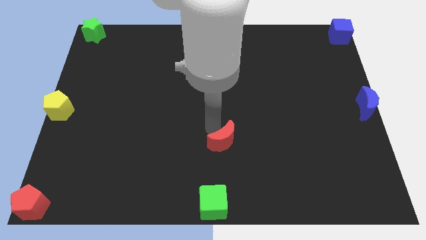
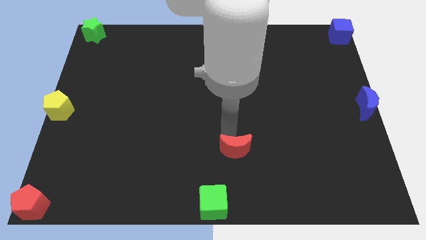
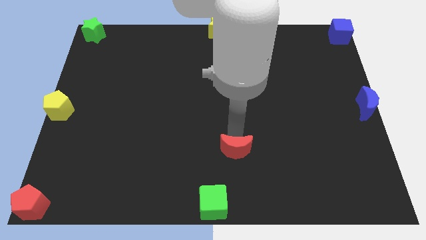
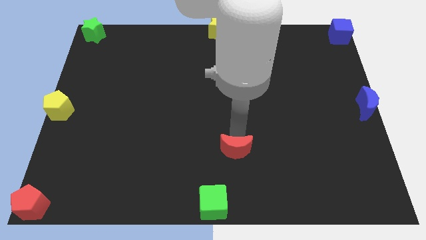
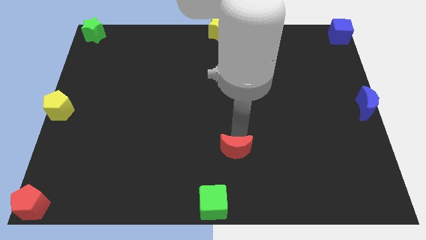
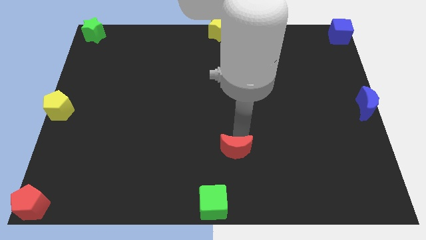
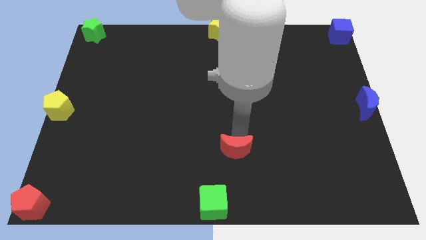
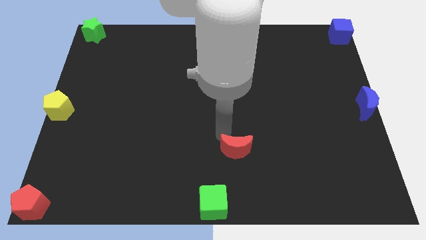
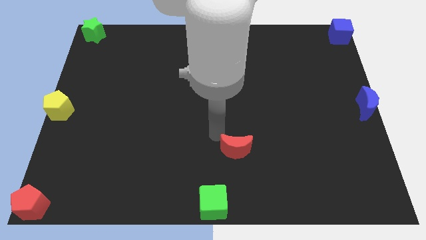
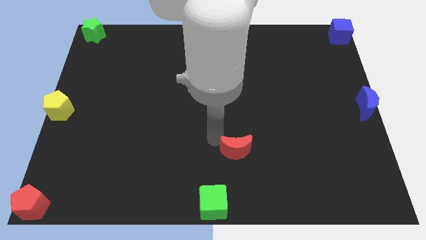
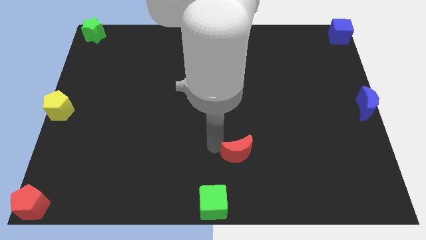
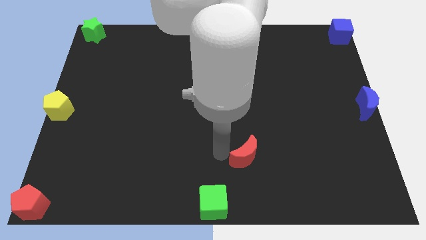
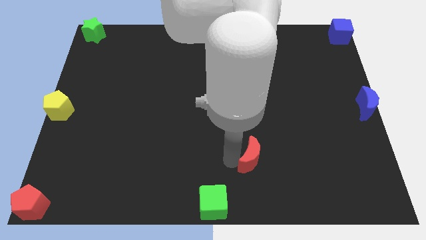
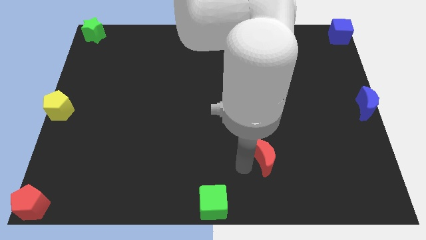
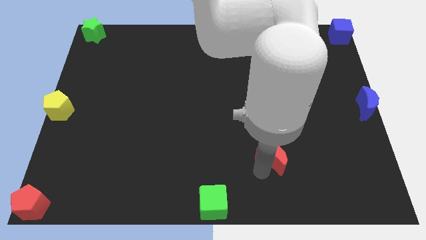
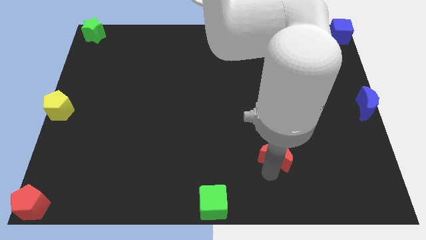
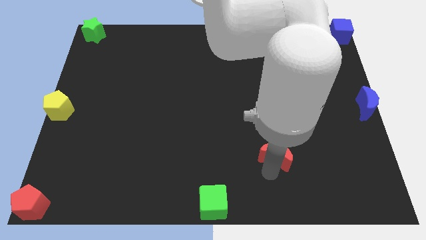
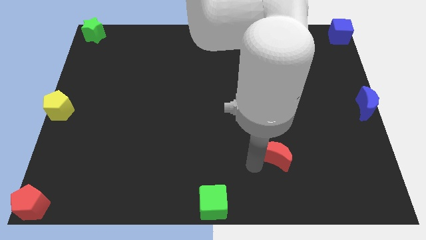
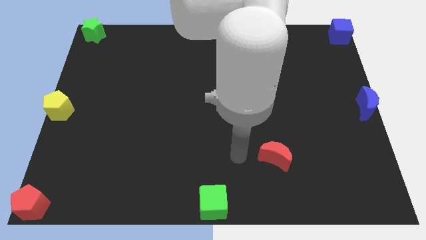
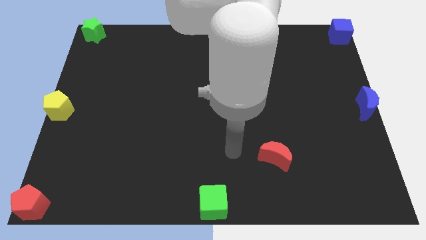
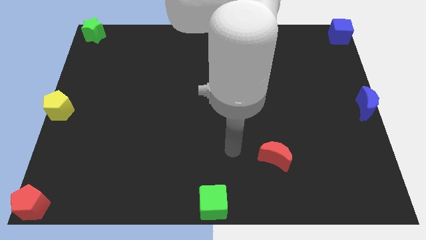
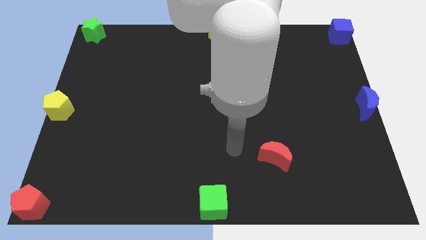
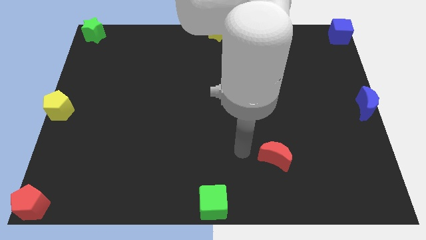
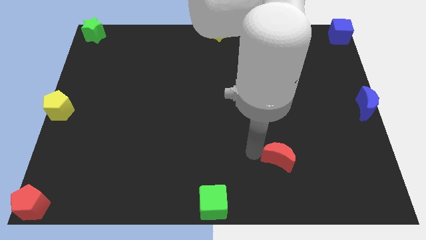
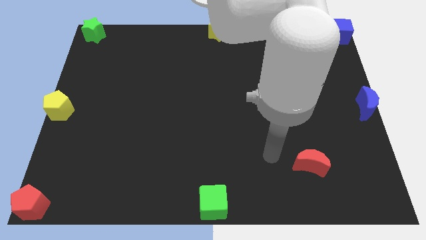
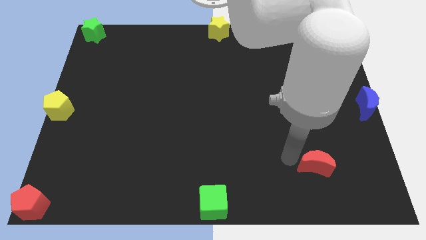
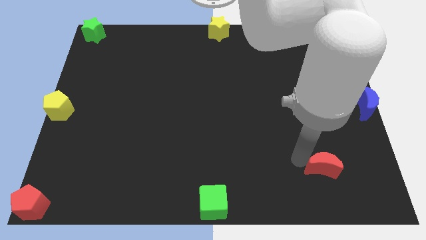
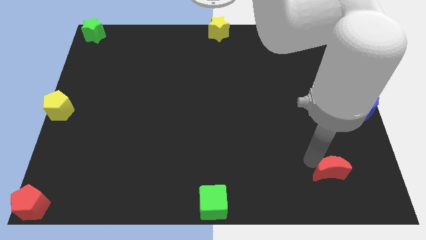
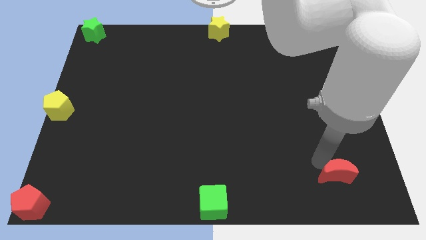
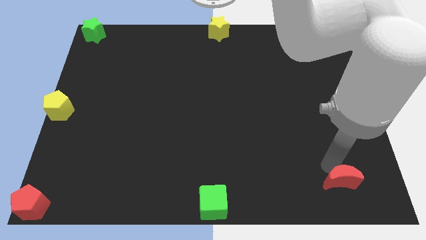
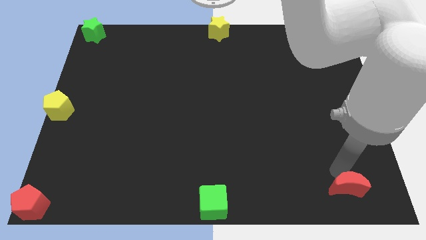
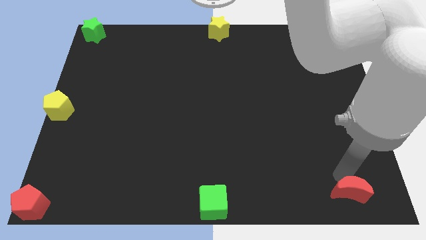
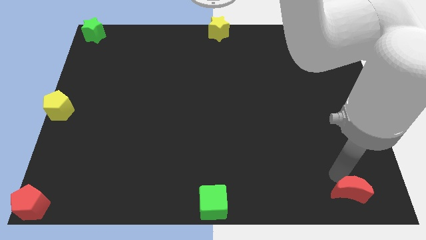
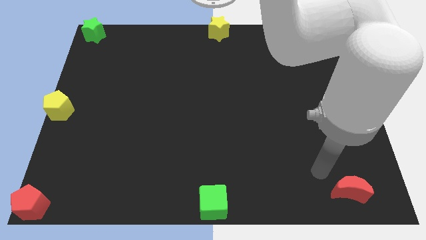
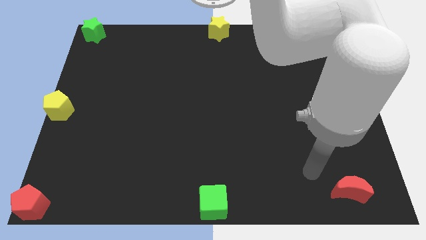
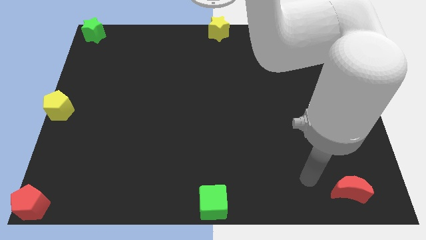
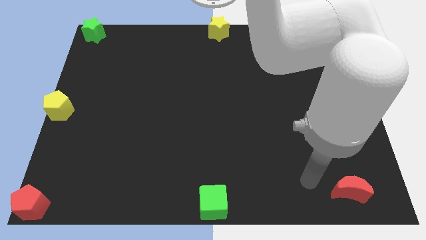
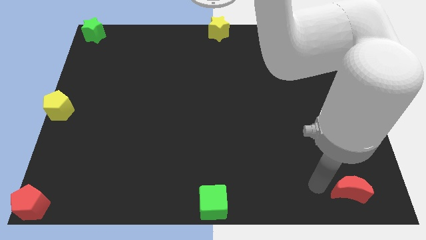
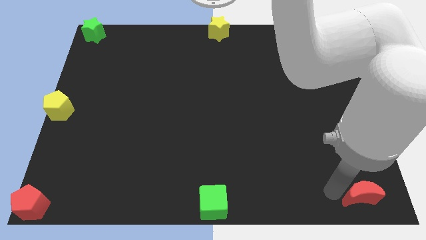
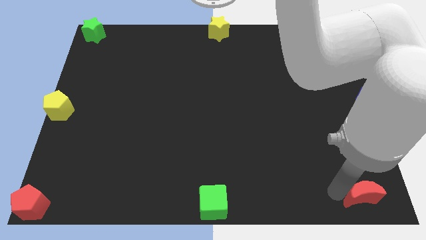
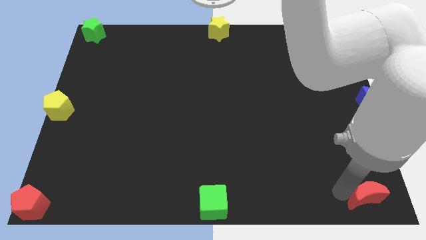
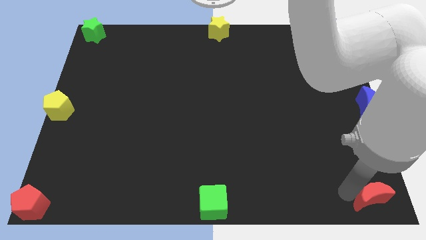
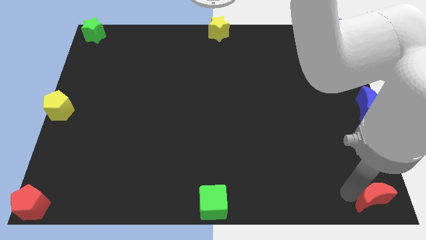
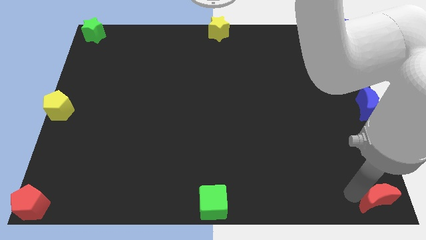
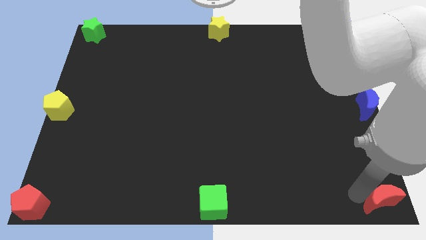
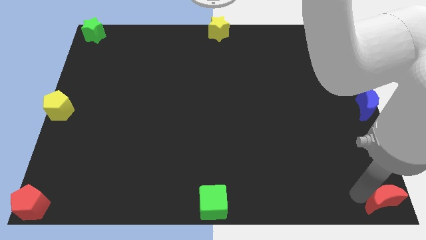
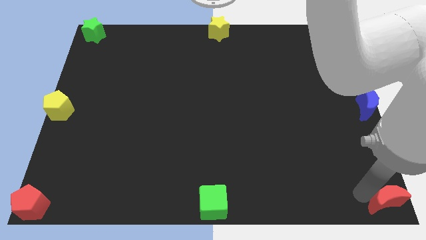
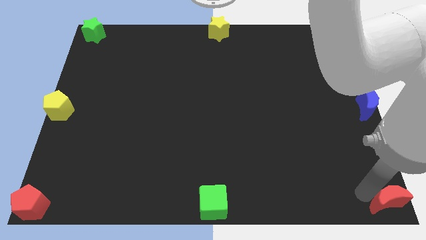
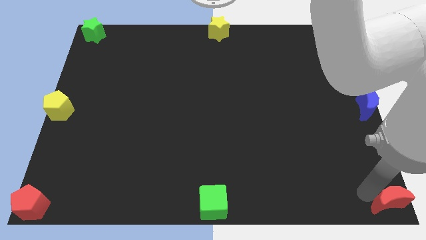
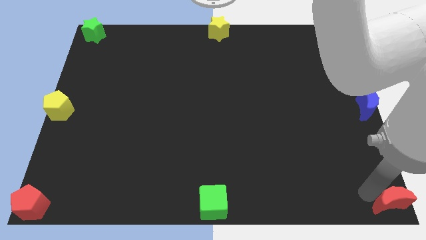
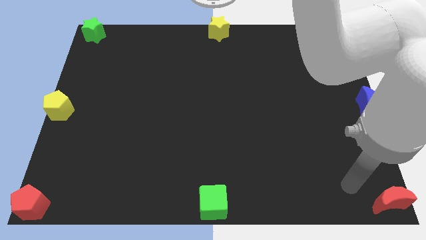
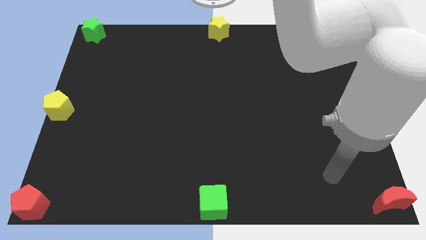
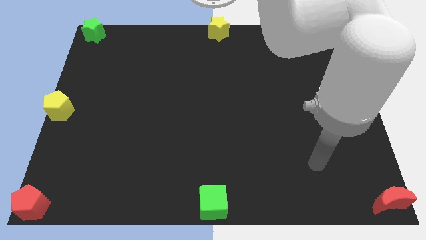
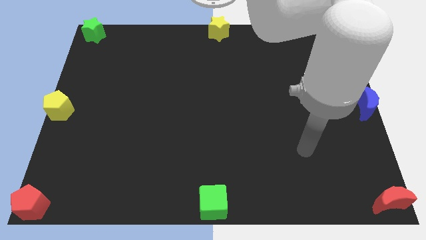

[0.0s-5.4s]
move red crescent to the bottom right corner

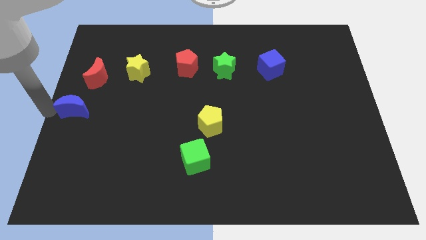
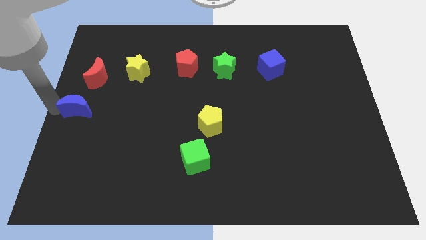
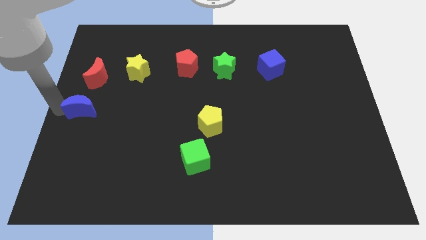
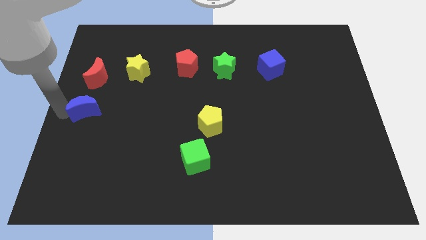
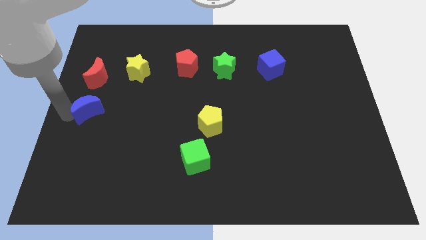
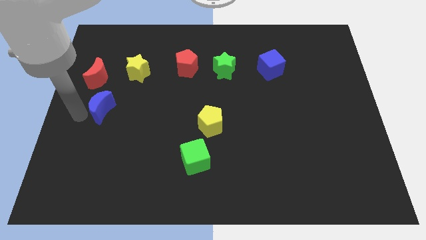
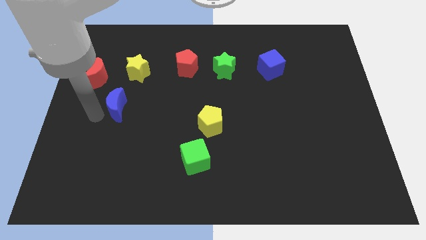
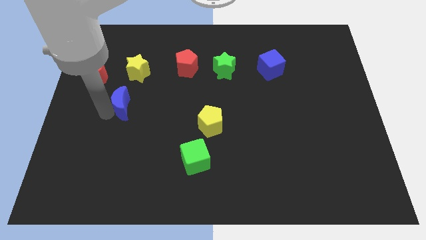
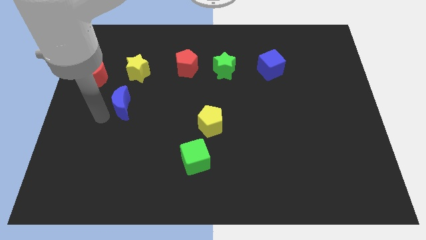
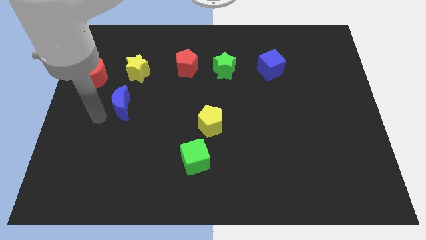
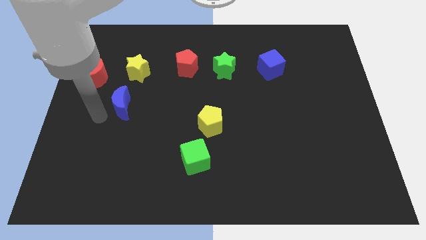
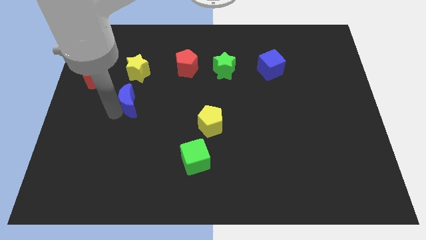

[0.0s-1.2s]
push blue moon towards right side

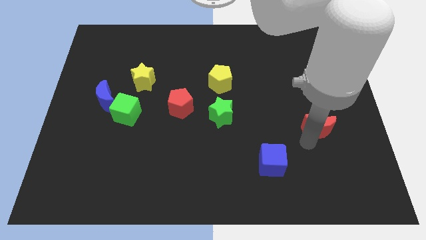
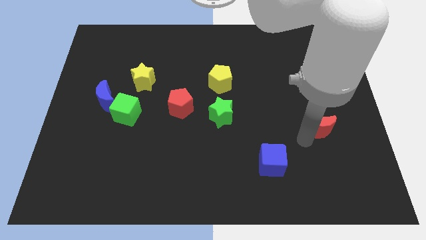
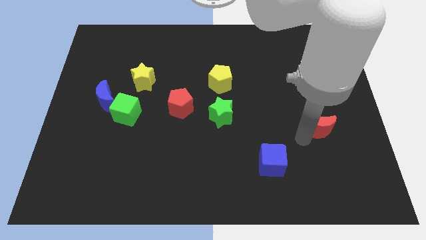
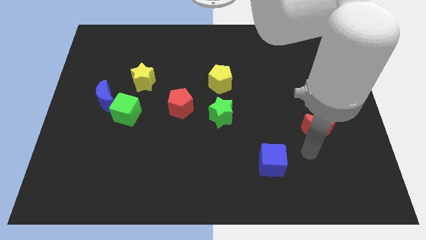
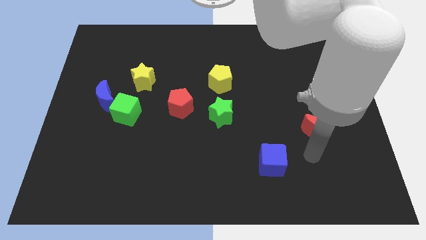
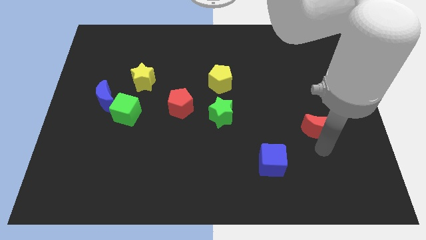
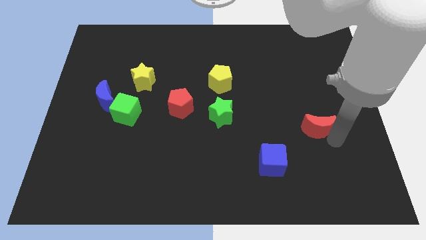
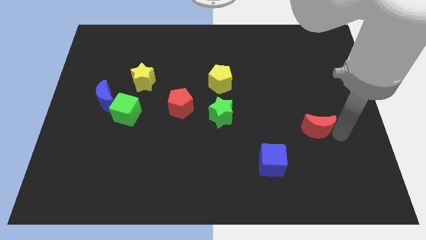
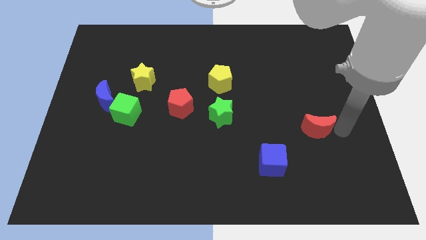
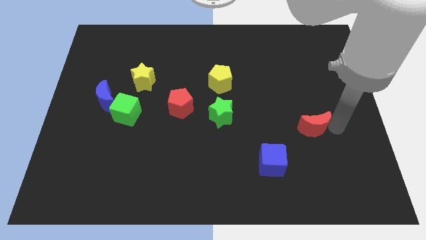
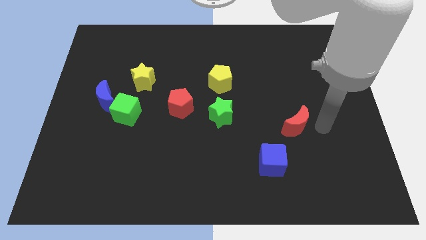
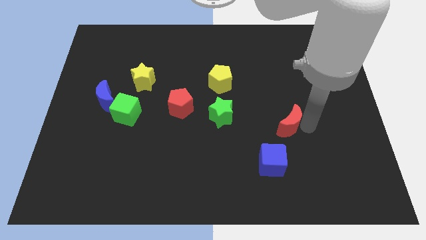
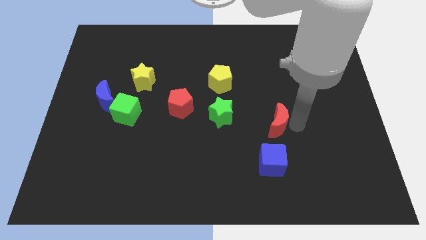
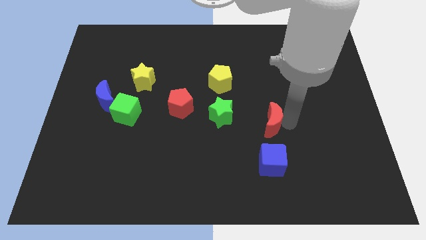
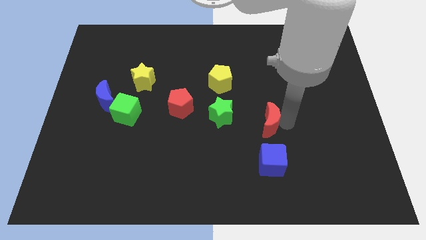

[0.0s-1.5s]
put red moon to the top of blue cube

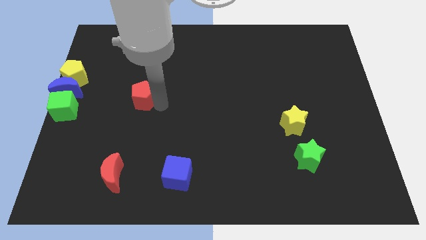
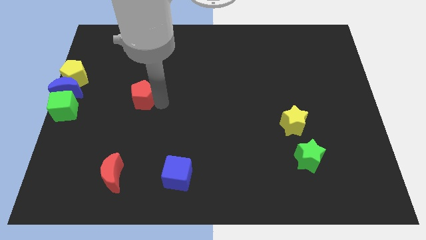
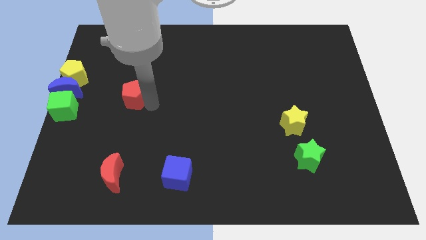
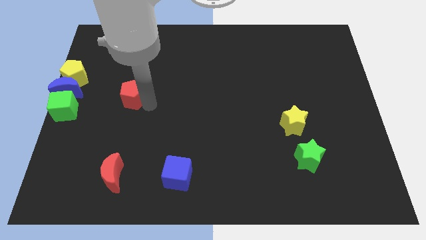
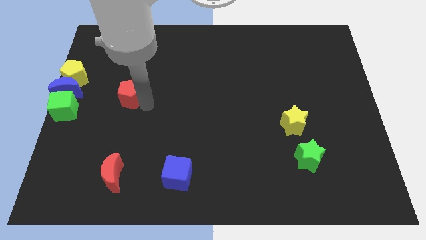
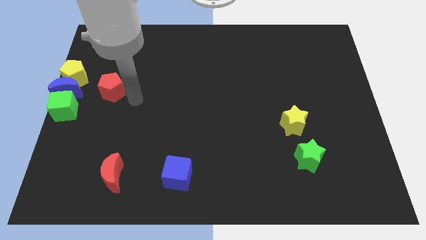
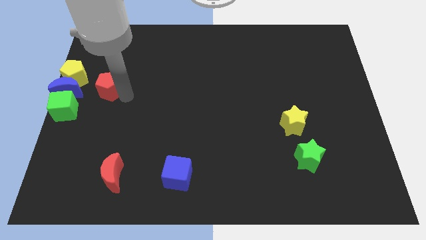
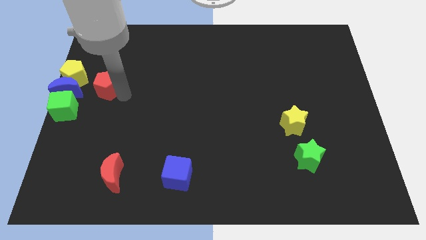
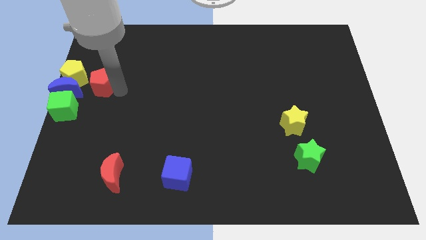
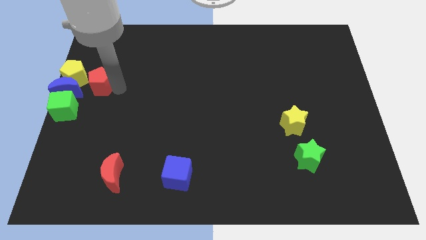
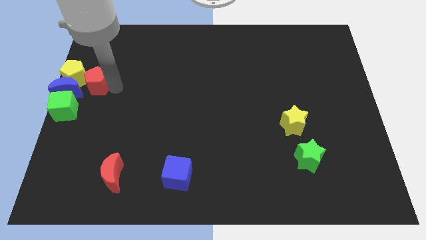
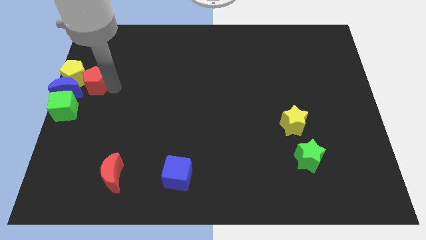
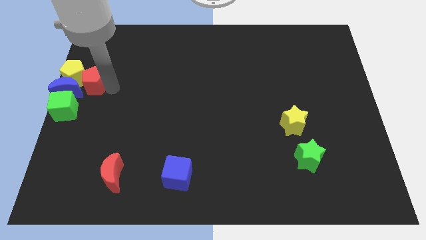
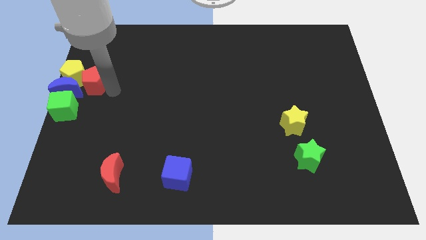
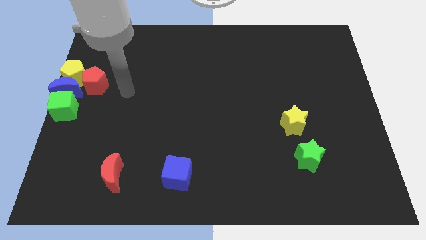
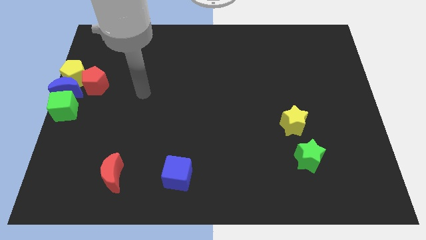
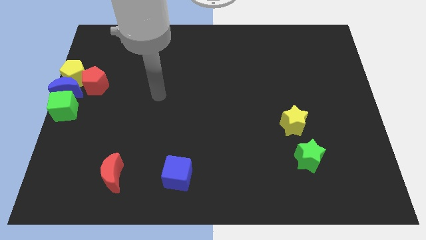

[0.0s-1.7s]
slide the red pentagon towards the yellow pentagon
